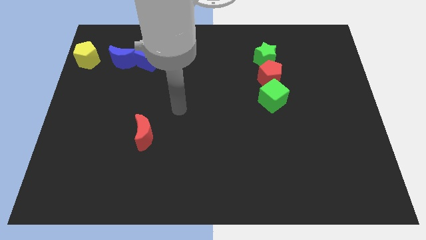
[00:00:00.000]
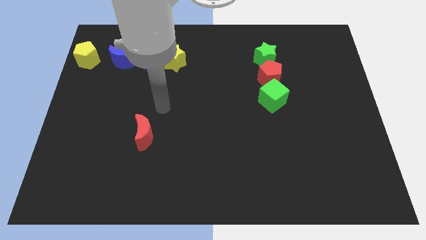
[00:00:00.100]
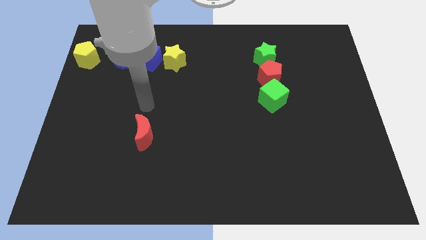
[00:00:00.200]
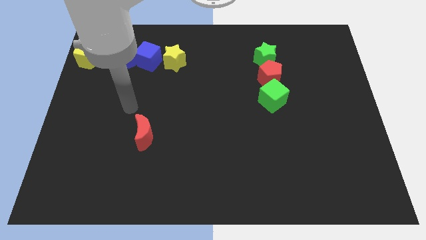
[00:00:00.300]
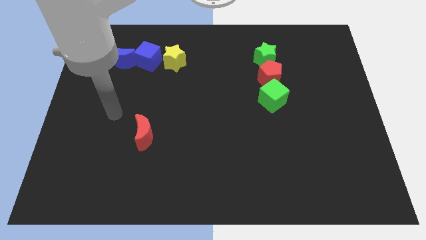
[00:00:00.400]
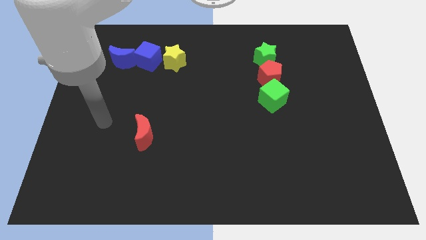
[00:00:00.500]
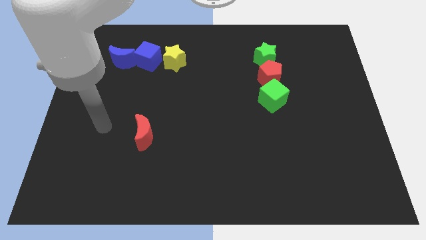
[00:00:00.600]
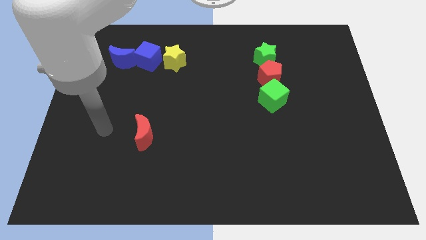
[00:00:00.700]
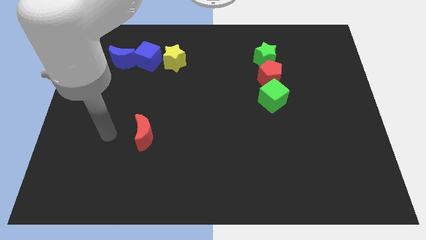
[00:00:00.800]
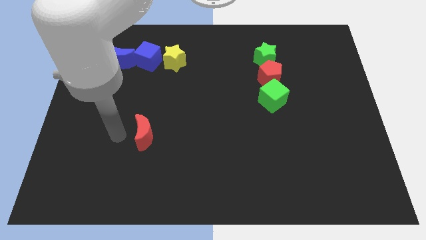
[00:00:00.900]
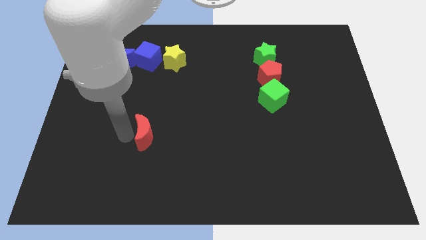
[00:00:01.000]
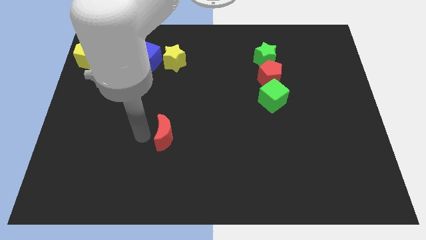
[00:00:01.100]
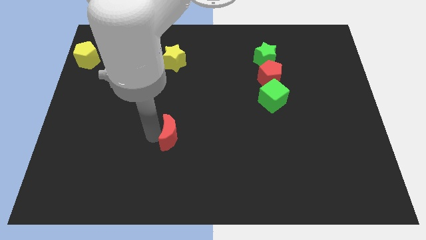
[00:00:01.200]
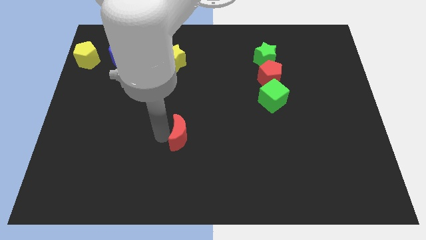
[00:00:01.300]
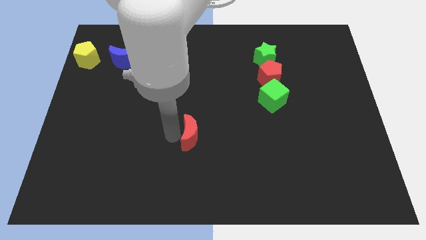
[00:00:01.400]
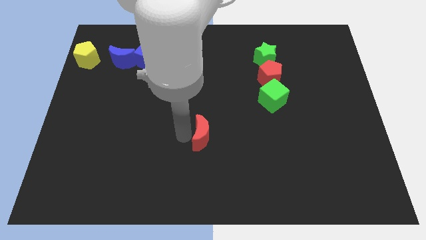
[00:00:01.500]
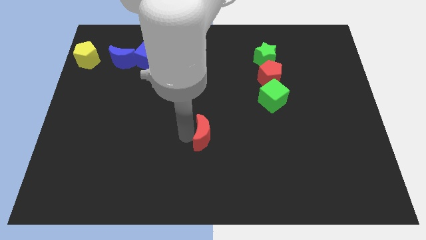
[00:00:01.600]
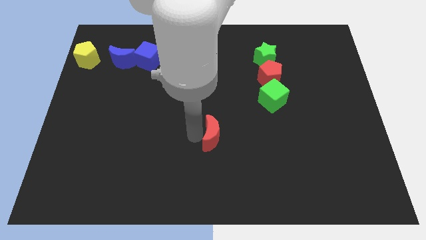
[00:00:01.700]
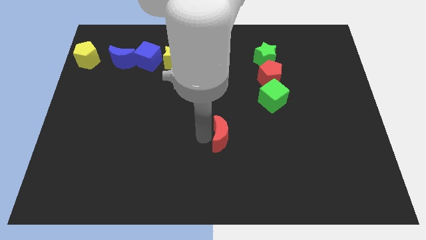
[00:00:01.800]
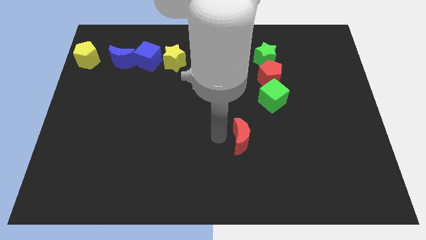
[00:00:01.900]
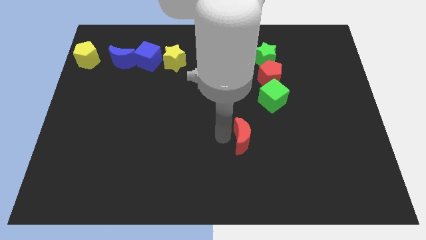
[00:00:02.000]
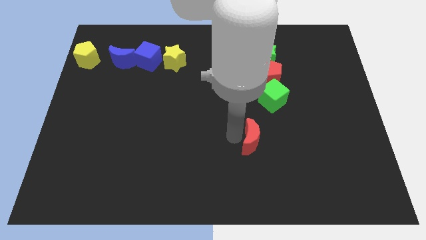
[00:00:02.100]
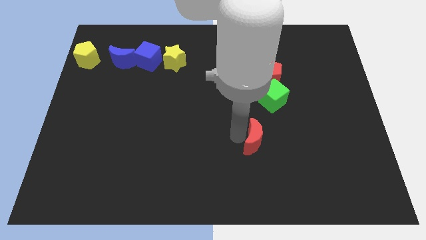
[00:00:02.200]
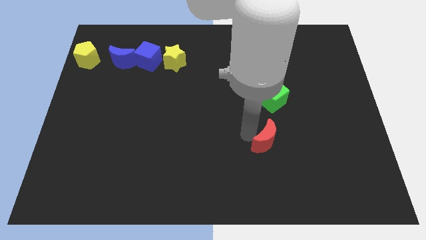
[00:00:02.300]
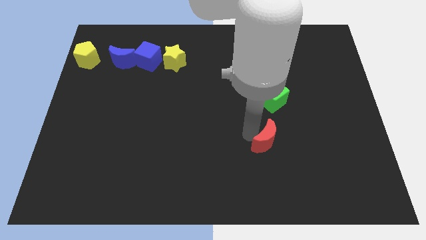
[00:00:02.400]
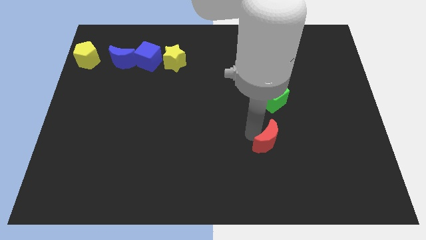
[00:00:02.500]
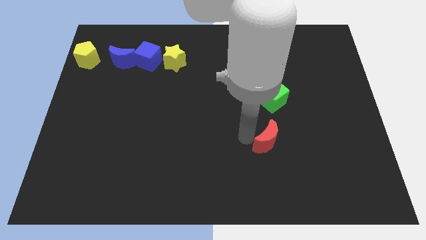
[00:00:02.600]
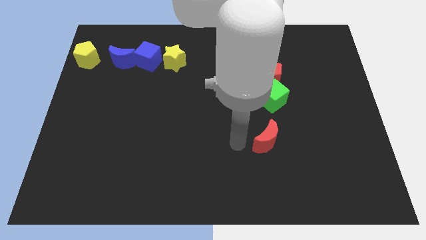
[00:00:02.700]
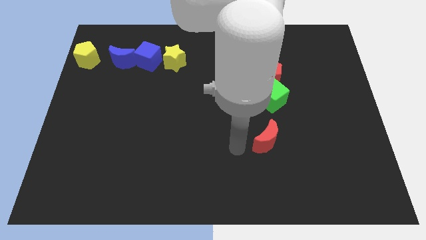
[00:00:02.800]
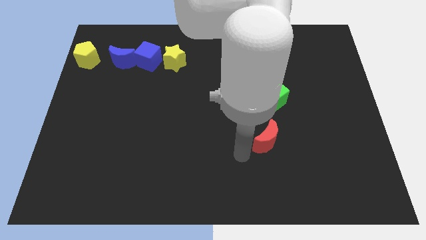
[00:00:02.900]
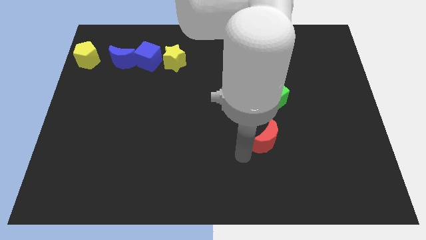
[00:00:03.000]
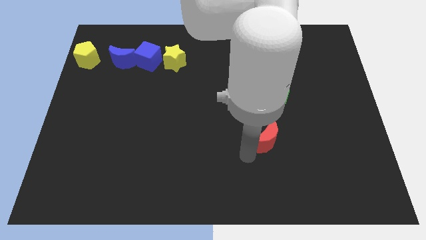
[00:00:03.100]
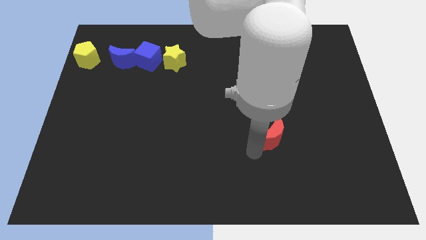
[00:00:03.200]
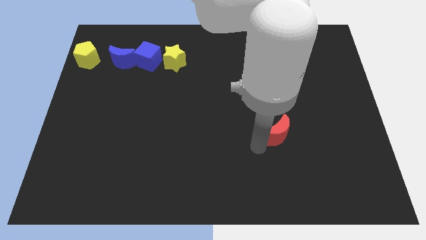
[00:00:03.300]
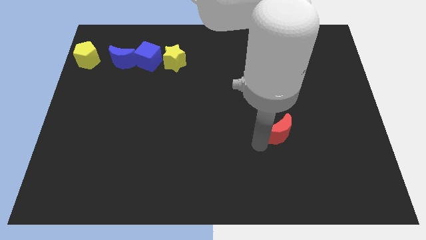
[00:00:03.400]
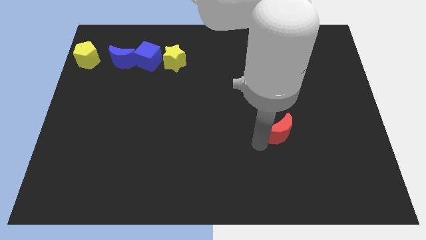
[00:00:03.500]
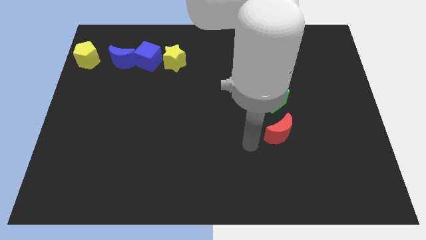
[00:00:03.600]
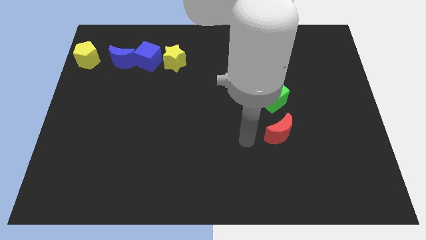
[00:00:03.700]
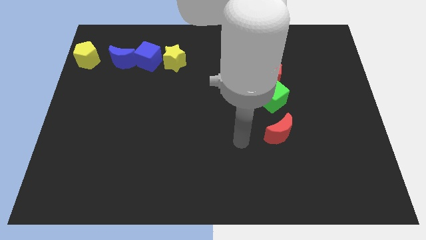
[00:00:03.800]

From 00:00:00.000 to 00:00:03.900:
place red crescent below gree cube

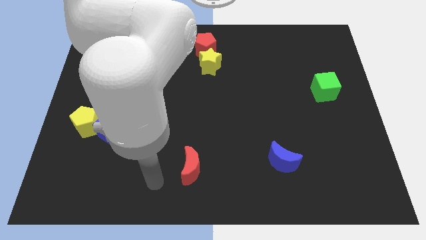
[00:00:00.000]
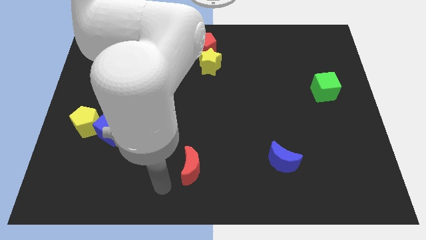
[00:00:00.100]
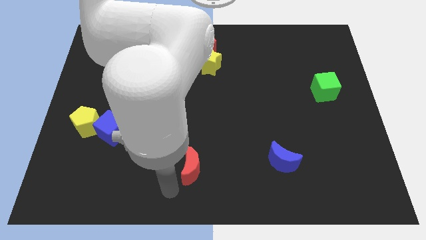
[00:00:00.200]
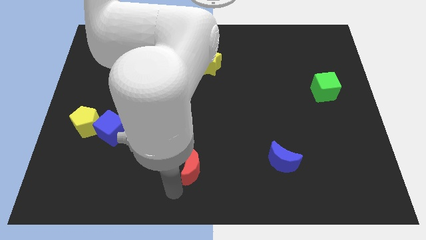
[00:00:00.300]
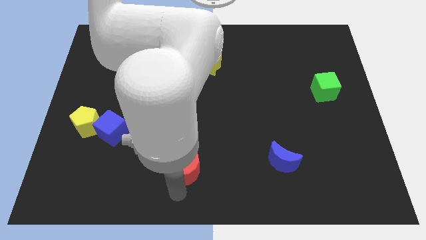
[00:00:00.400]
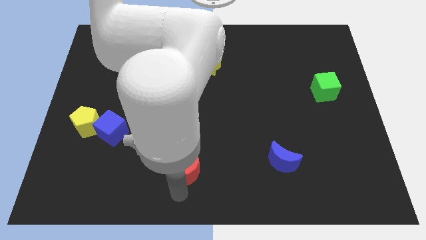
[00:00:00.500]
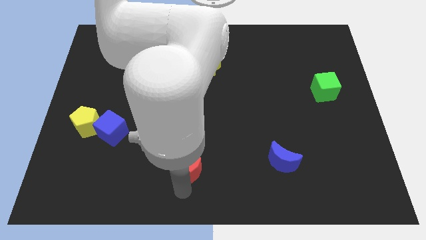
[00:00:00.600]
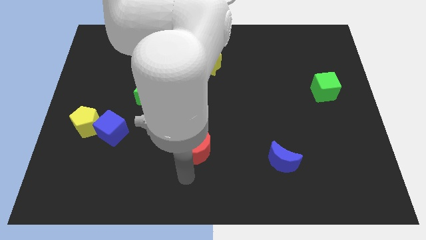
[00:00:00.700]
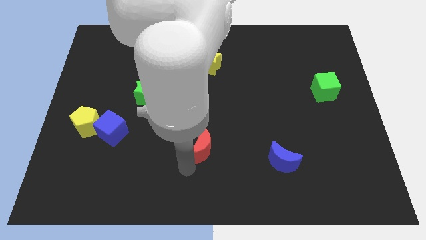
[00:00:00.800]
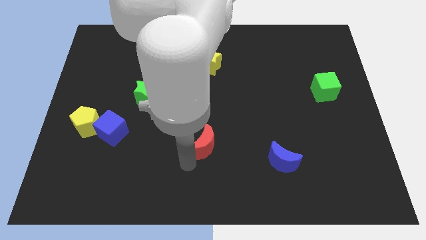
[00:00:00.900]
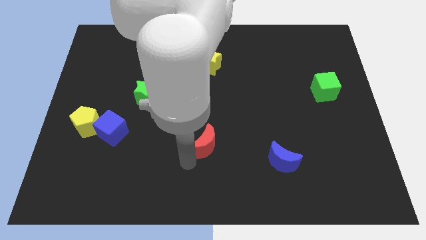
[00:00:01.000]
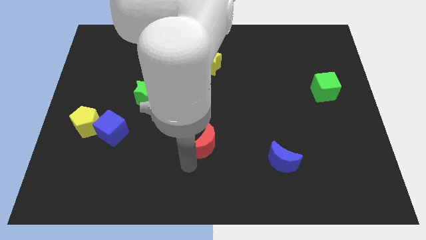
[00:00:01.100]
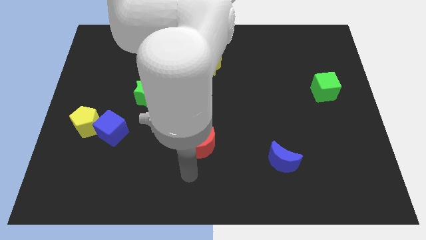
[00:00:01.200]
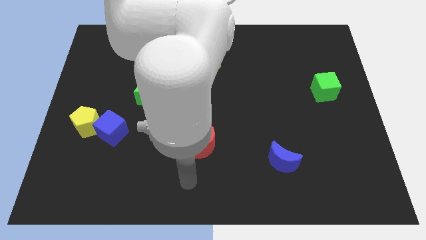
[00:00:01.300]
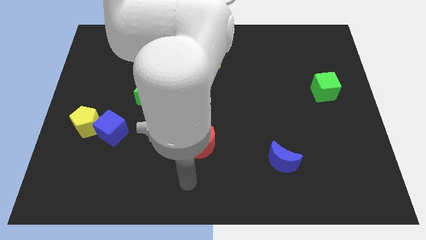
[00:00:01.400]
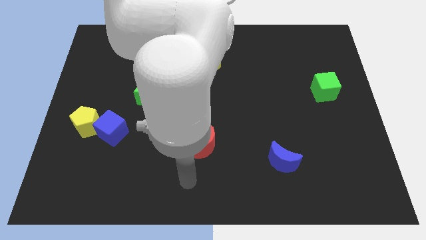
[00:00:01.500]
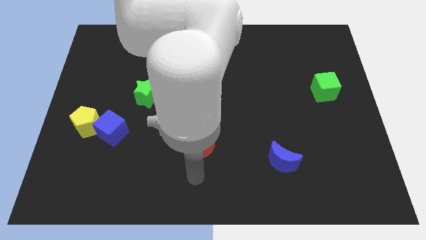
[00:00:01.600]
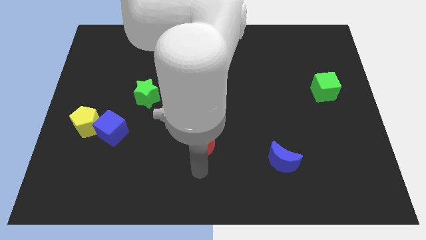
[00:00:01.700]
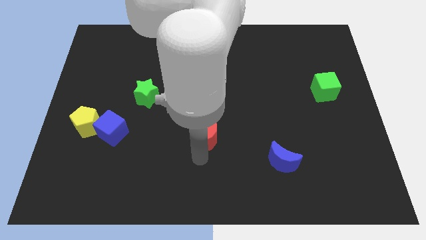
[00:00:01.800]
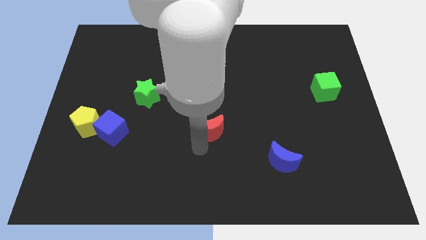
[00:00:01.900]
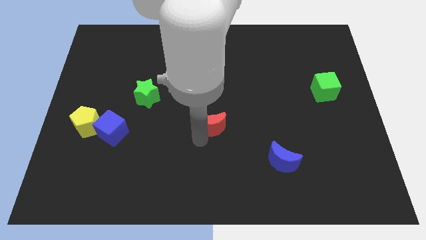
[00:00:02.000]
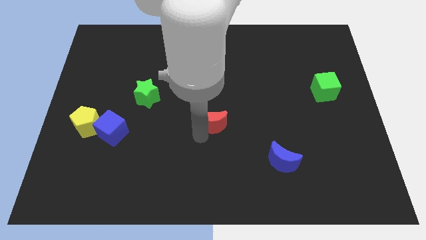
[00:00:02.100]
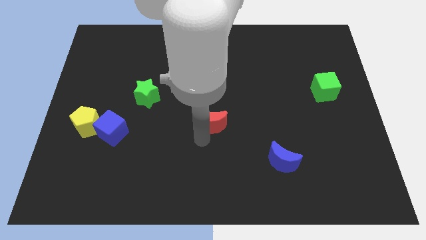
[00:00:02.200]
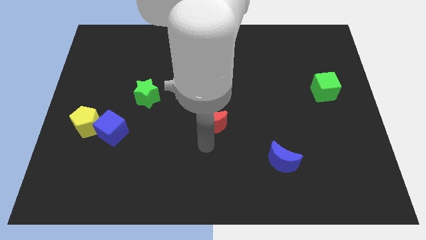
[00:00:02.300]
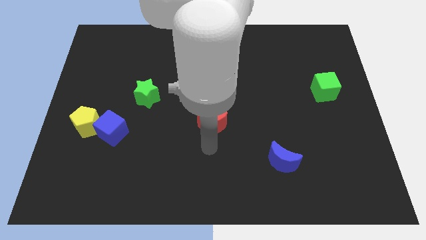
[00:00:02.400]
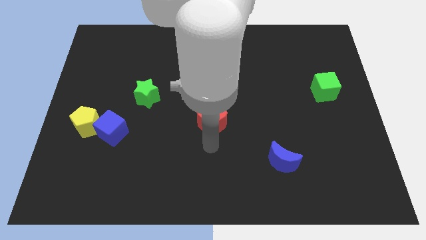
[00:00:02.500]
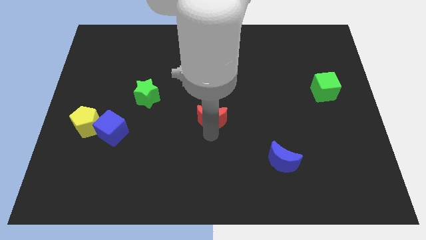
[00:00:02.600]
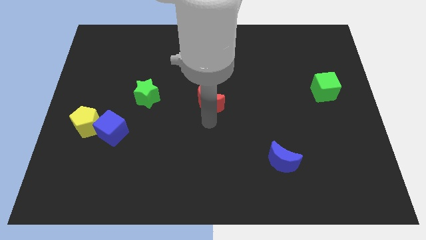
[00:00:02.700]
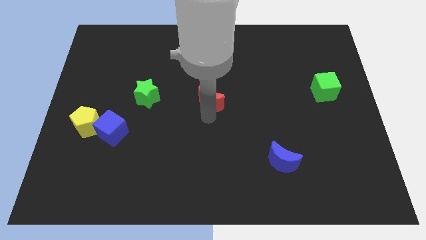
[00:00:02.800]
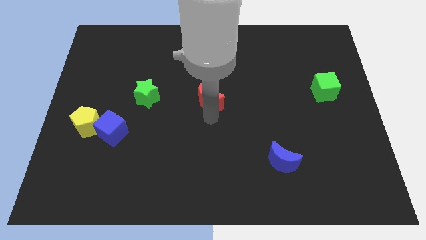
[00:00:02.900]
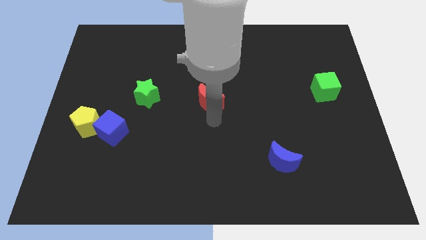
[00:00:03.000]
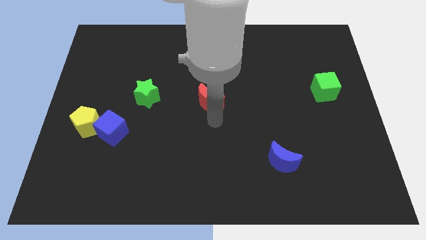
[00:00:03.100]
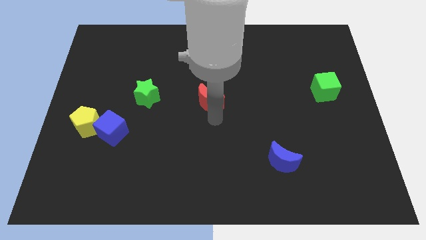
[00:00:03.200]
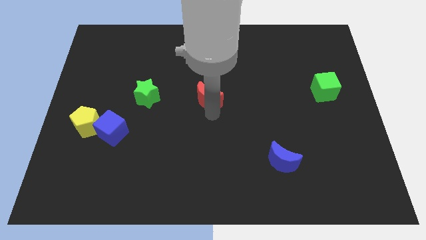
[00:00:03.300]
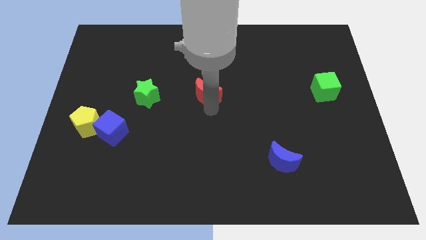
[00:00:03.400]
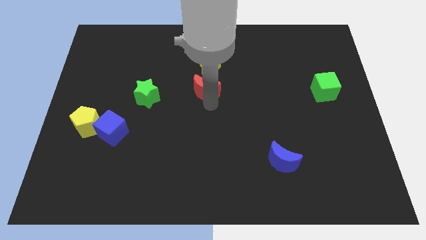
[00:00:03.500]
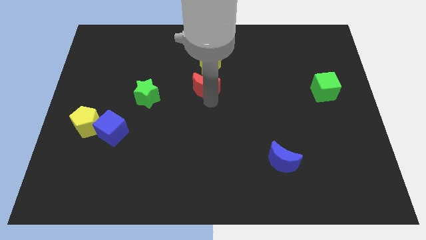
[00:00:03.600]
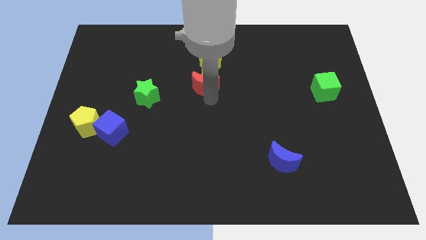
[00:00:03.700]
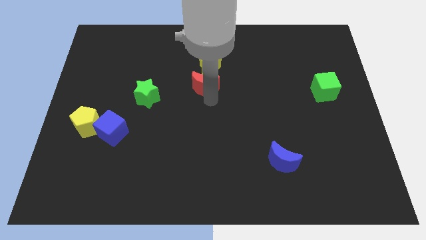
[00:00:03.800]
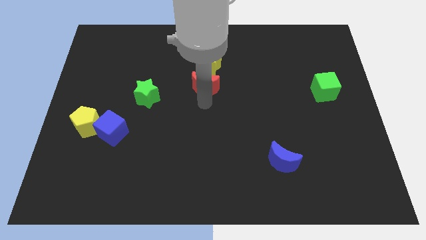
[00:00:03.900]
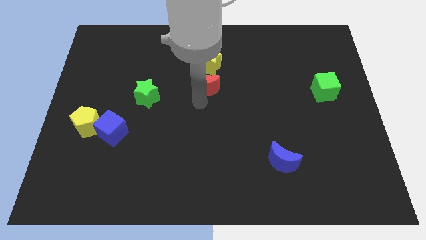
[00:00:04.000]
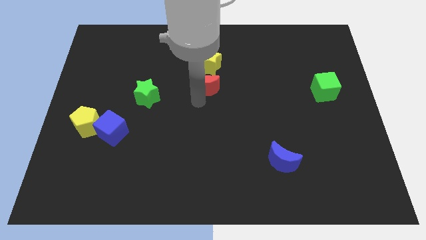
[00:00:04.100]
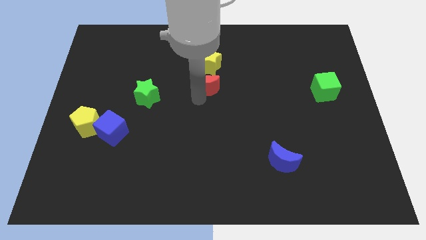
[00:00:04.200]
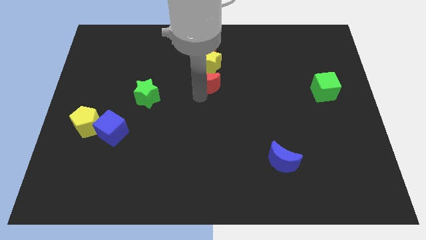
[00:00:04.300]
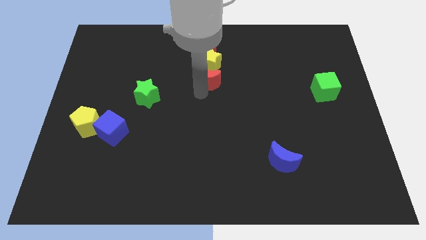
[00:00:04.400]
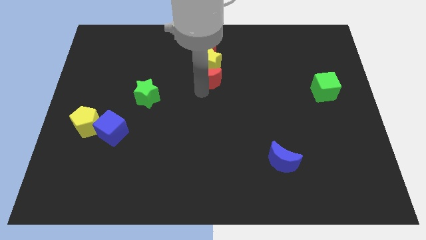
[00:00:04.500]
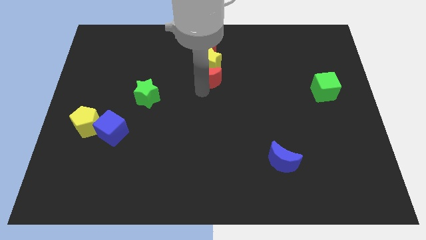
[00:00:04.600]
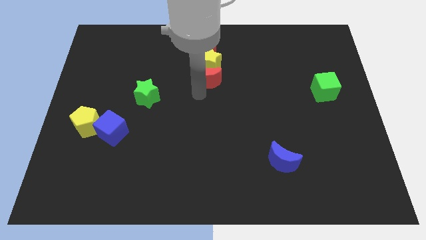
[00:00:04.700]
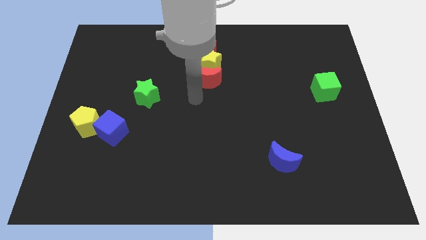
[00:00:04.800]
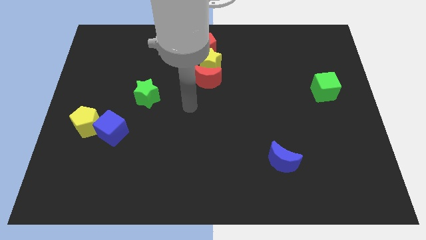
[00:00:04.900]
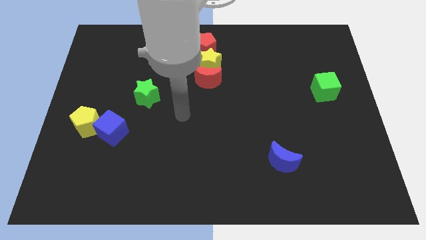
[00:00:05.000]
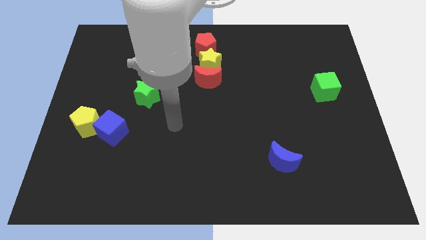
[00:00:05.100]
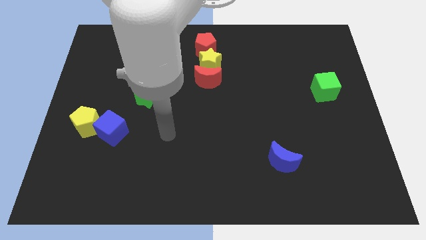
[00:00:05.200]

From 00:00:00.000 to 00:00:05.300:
push the red moon to the bottom side of the yellow star
